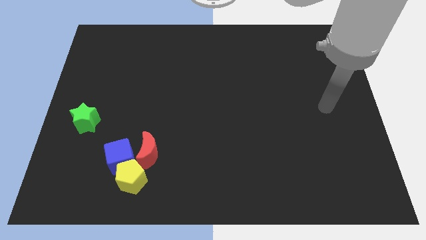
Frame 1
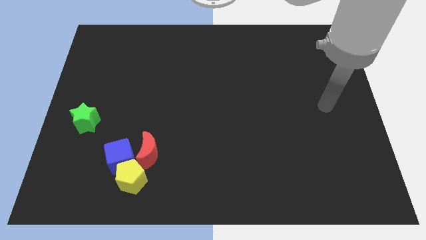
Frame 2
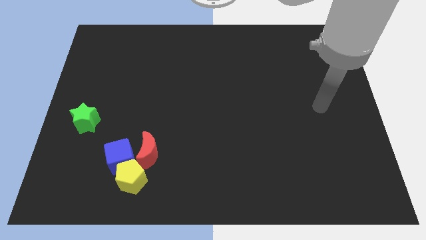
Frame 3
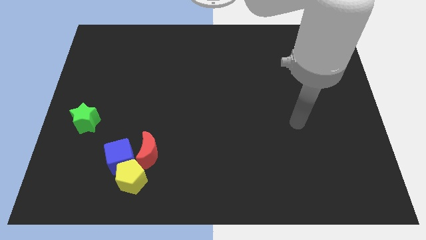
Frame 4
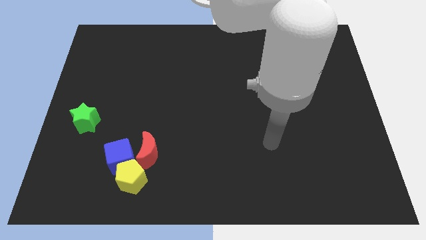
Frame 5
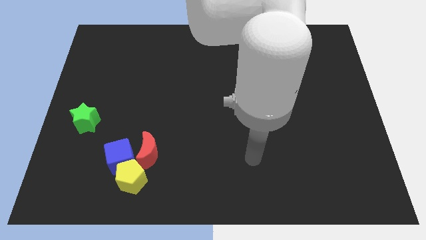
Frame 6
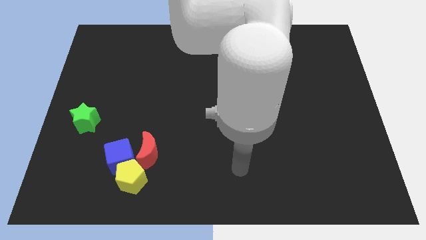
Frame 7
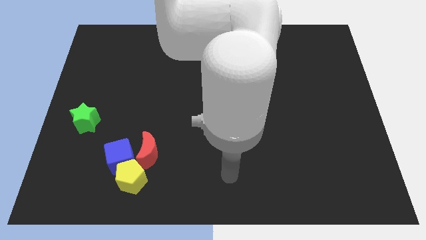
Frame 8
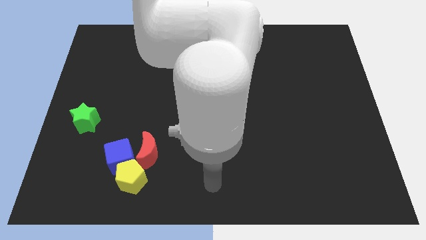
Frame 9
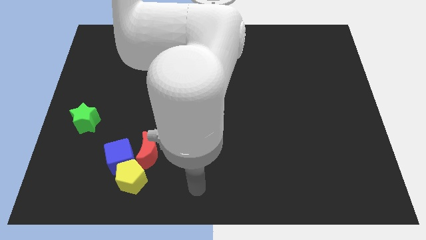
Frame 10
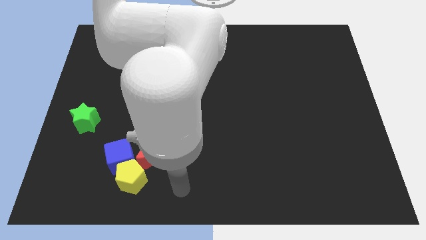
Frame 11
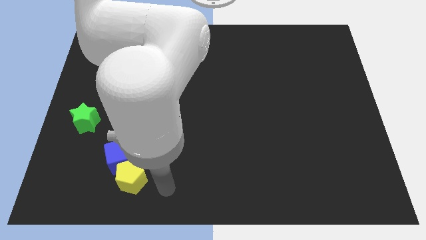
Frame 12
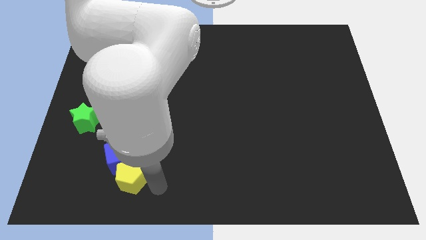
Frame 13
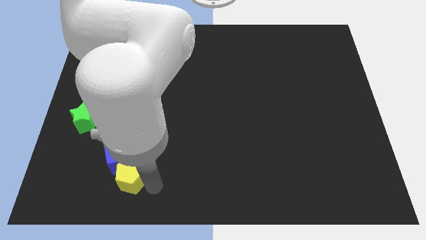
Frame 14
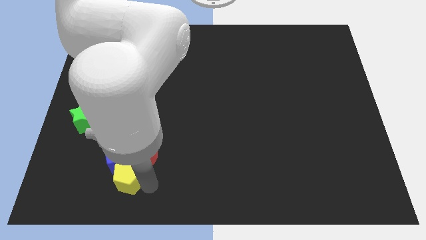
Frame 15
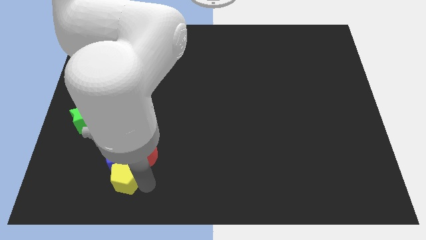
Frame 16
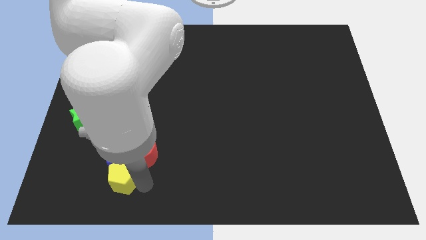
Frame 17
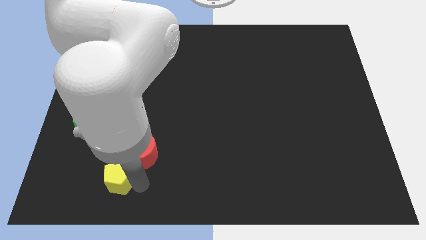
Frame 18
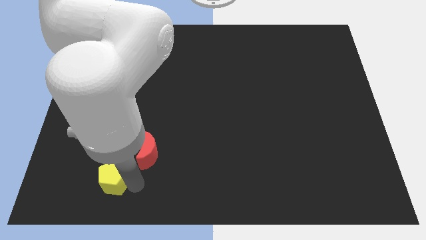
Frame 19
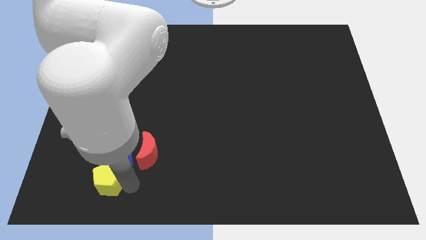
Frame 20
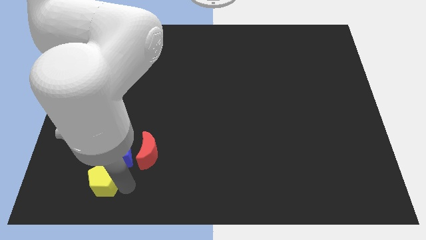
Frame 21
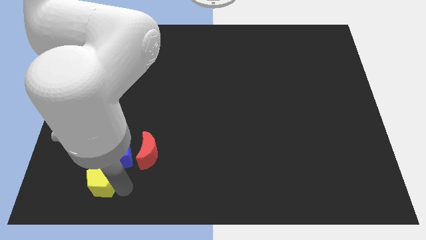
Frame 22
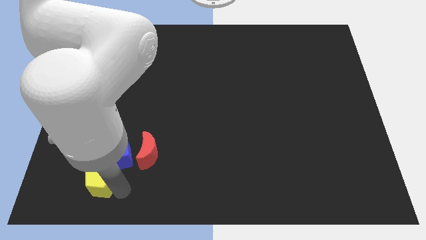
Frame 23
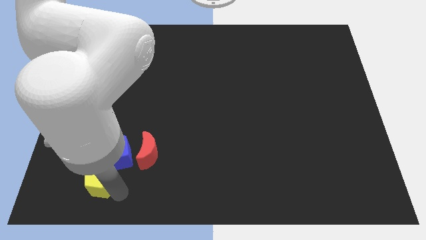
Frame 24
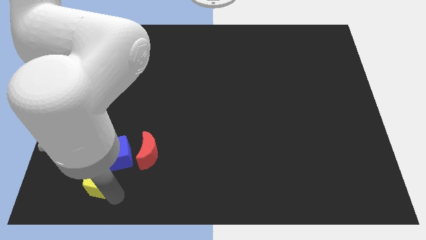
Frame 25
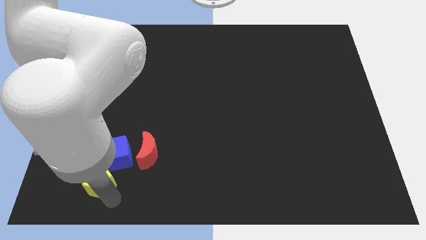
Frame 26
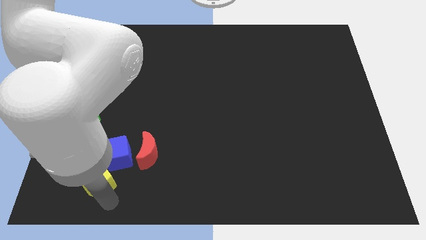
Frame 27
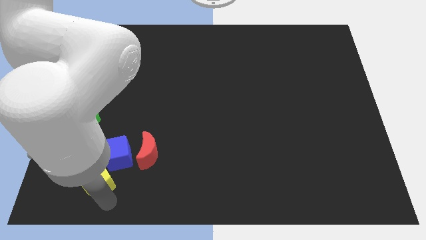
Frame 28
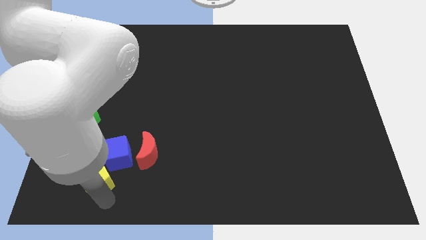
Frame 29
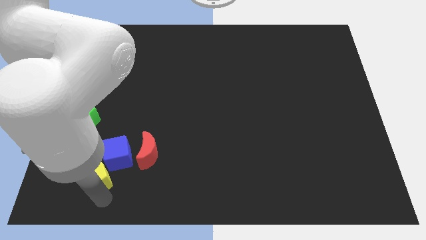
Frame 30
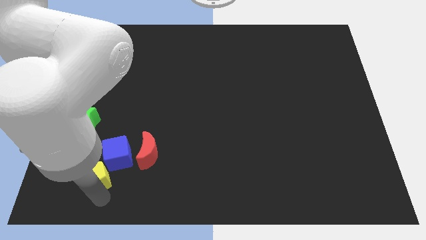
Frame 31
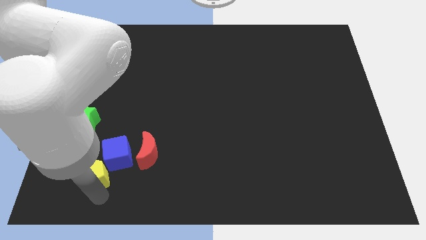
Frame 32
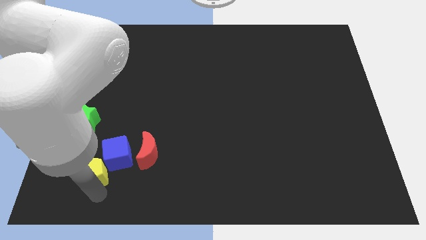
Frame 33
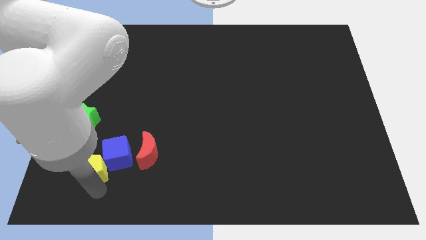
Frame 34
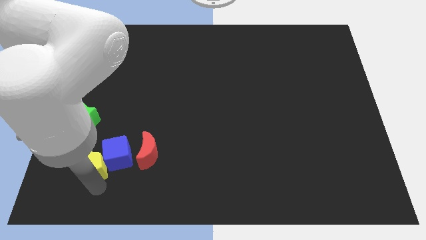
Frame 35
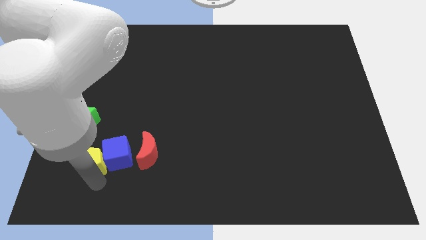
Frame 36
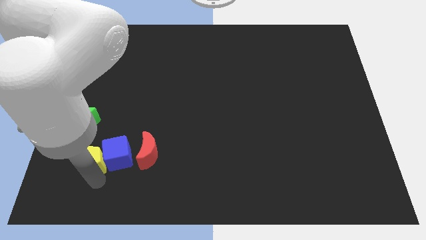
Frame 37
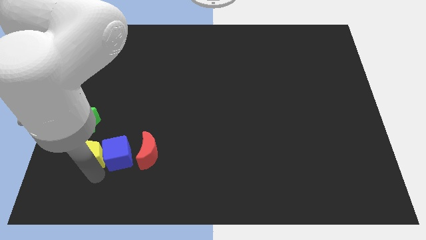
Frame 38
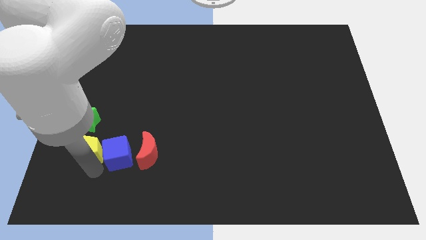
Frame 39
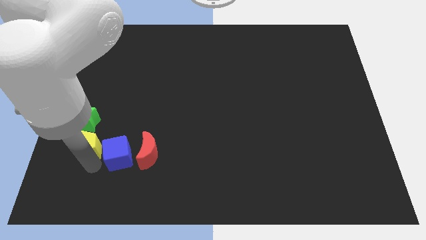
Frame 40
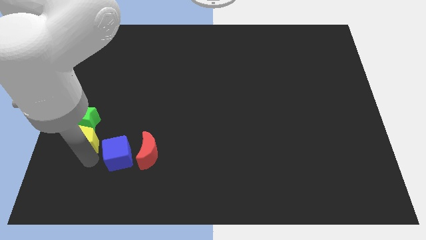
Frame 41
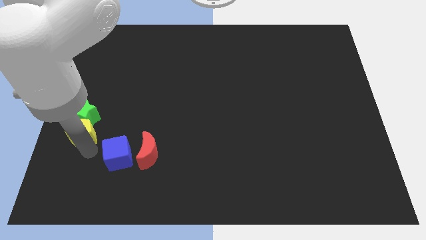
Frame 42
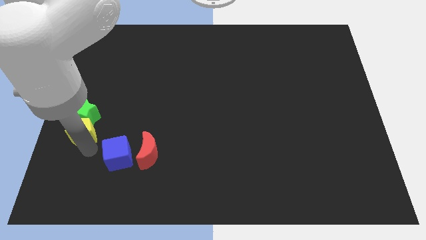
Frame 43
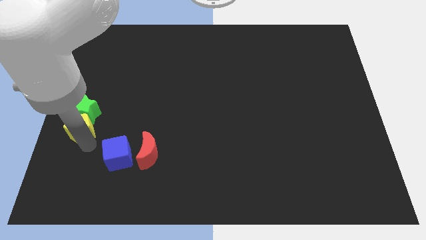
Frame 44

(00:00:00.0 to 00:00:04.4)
slide the pentagon next to the star

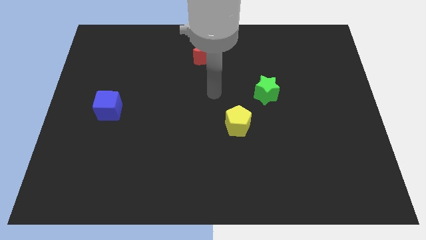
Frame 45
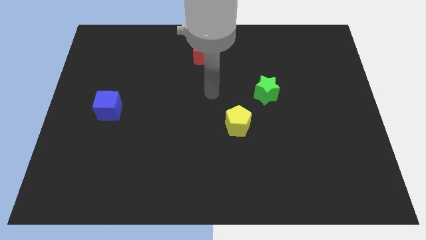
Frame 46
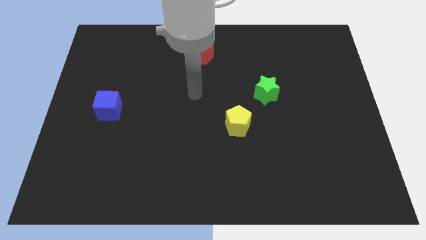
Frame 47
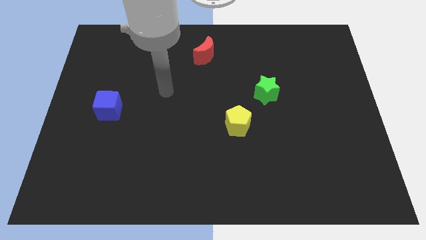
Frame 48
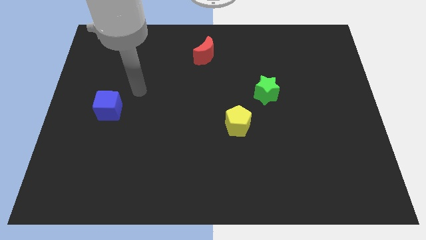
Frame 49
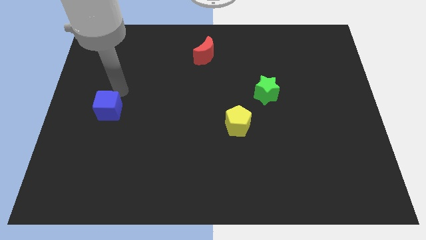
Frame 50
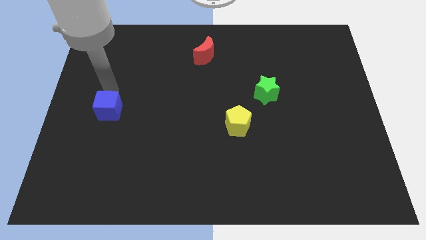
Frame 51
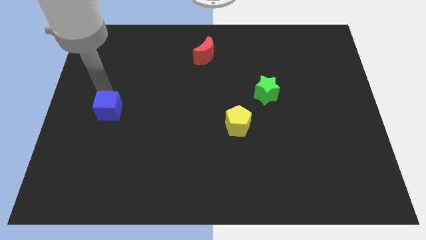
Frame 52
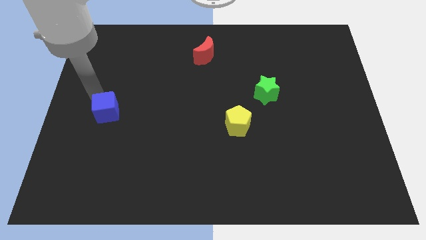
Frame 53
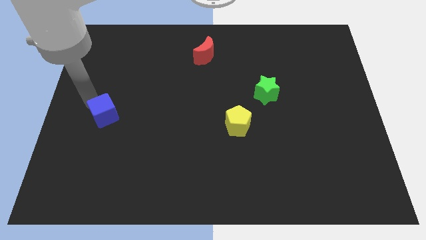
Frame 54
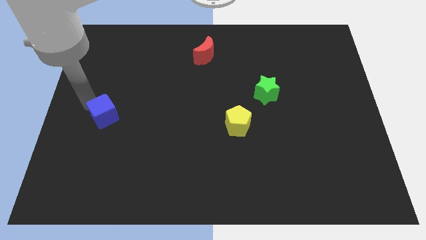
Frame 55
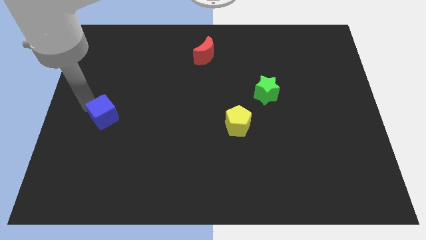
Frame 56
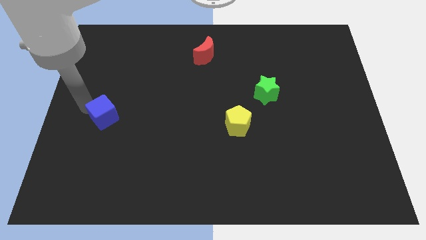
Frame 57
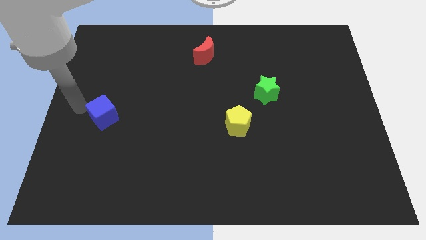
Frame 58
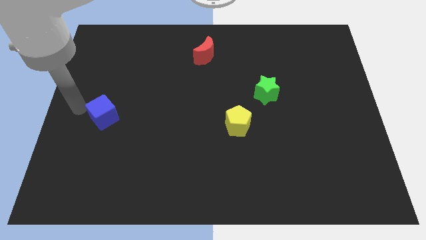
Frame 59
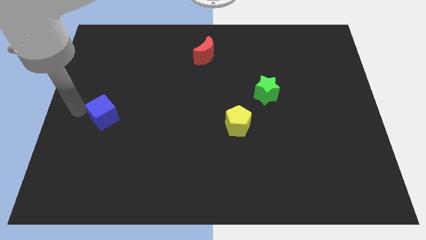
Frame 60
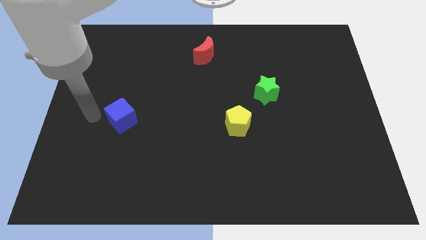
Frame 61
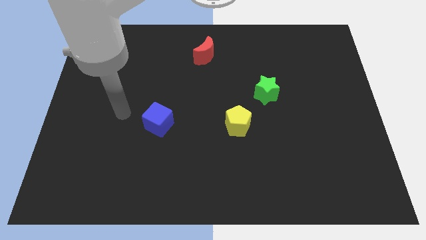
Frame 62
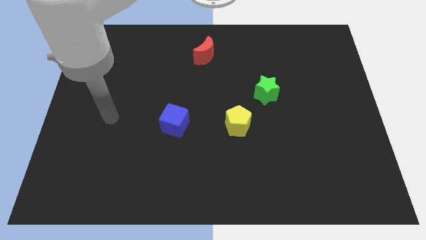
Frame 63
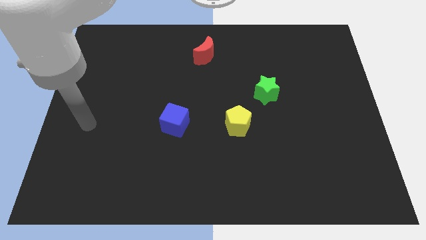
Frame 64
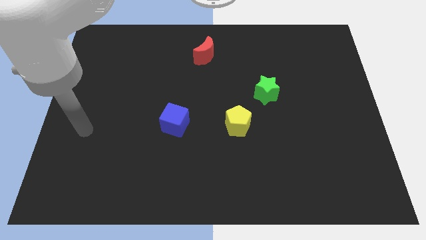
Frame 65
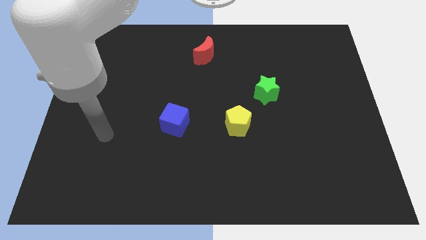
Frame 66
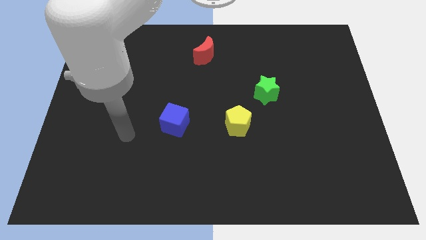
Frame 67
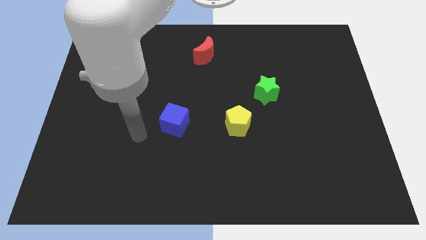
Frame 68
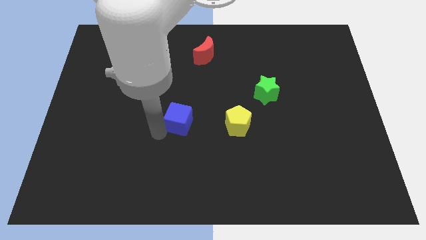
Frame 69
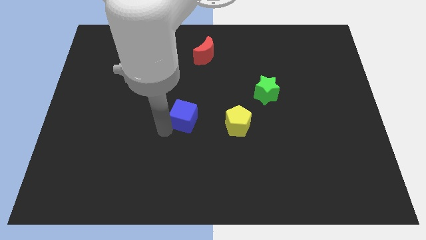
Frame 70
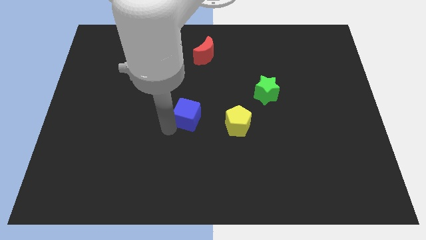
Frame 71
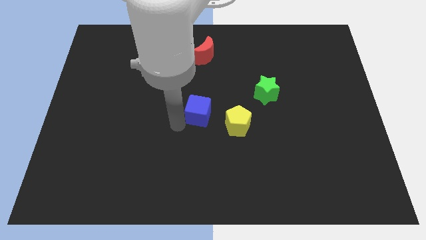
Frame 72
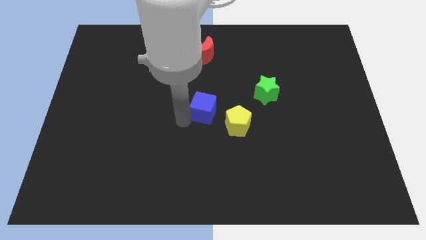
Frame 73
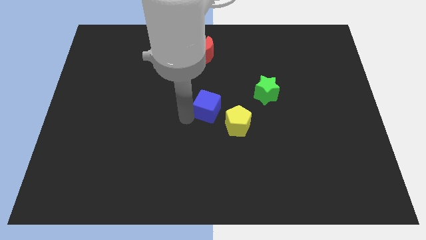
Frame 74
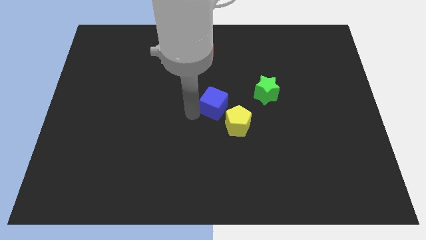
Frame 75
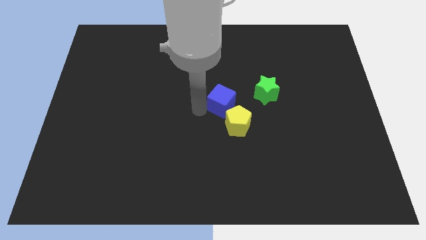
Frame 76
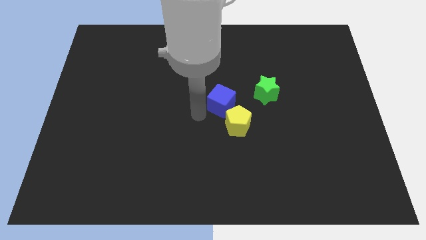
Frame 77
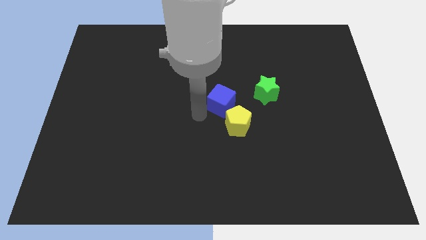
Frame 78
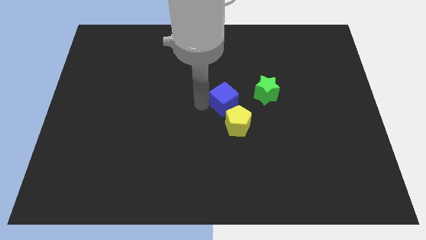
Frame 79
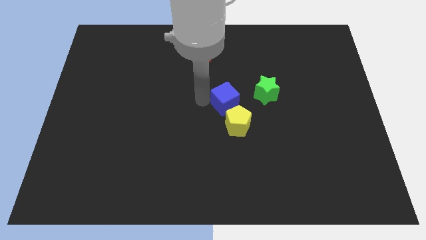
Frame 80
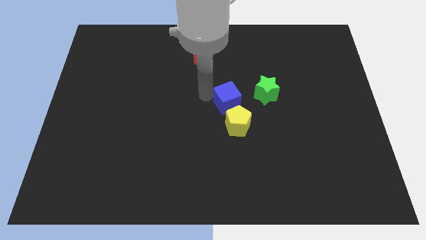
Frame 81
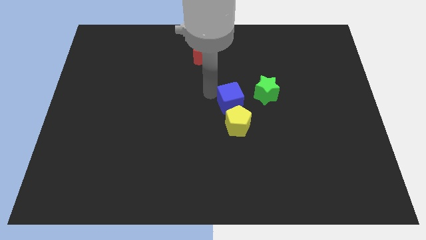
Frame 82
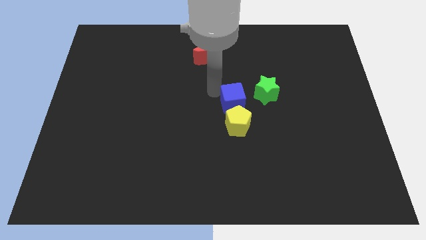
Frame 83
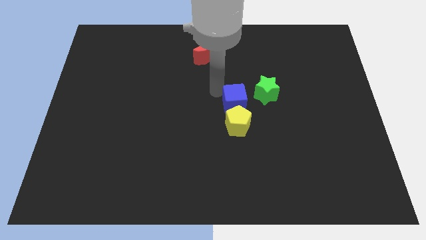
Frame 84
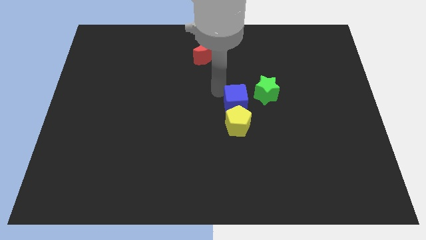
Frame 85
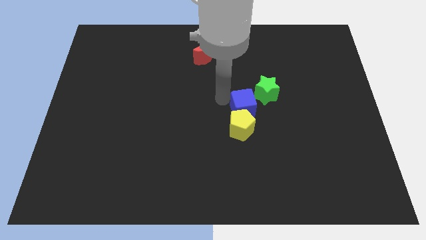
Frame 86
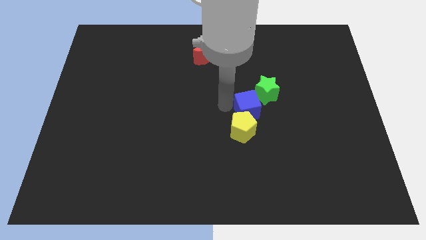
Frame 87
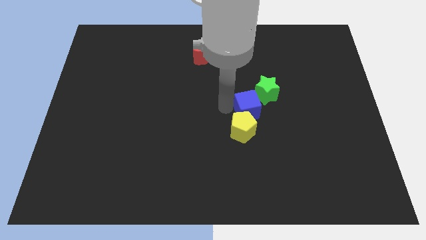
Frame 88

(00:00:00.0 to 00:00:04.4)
push the blue block close to the yellow block

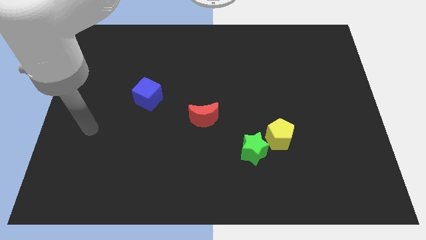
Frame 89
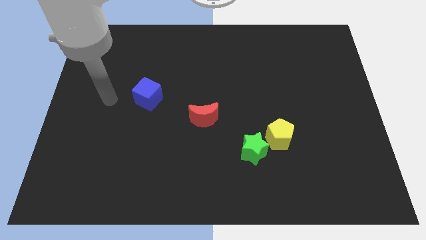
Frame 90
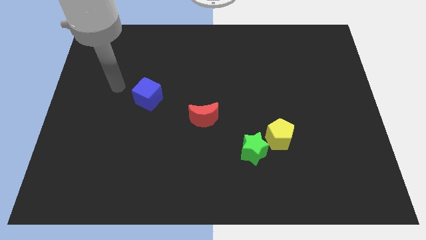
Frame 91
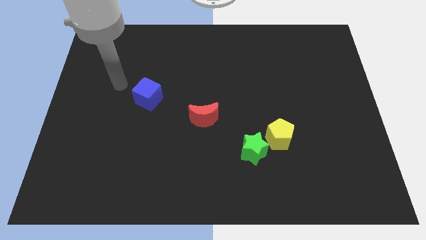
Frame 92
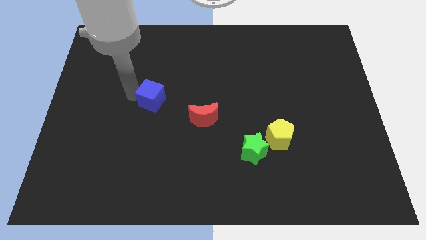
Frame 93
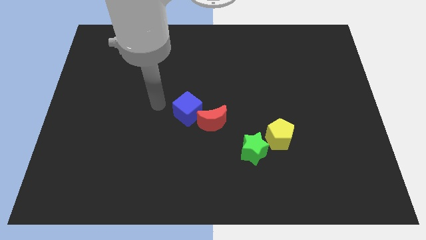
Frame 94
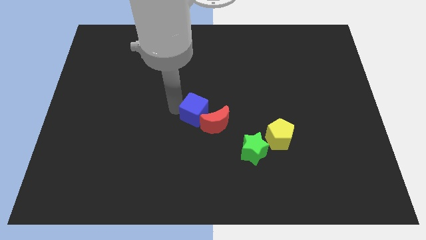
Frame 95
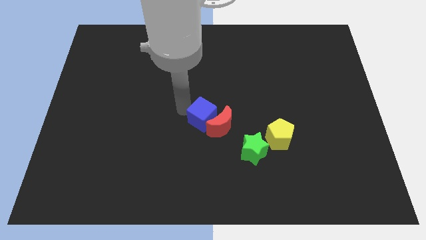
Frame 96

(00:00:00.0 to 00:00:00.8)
slide the blue block to the red block
